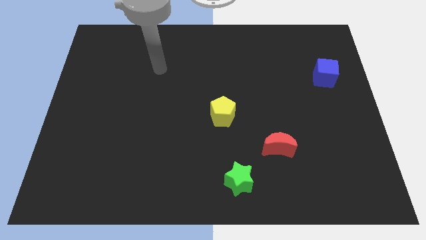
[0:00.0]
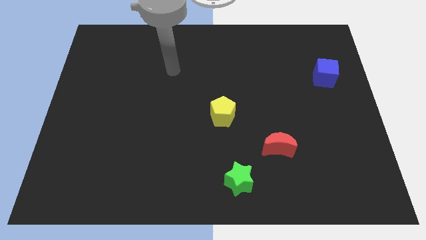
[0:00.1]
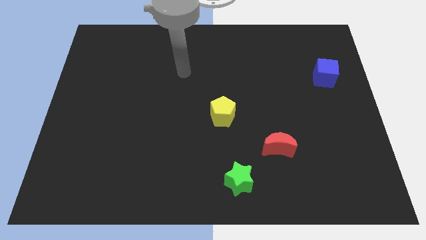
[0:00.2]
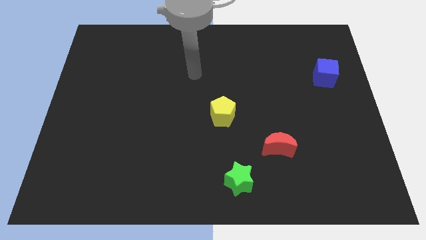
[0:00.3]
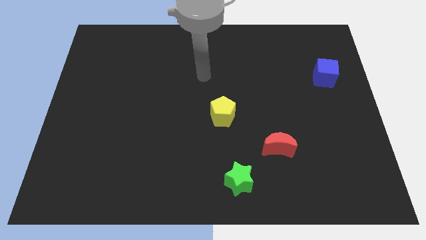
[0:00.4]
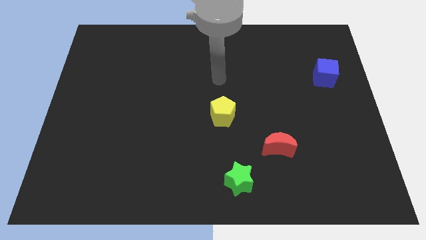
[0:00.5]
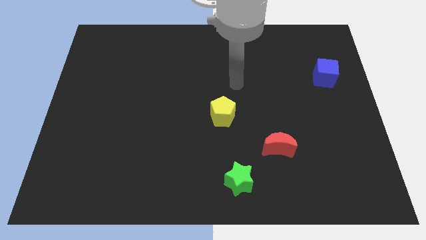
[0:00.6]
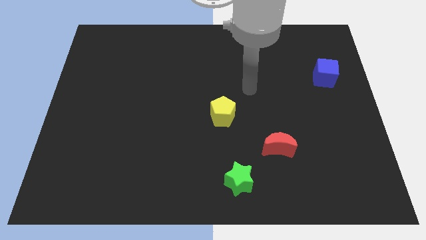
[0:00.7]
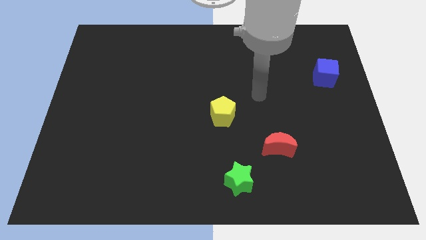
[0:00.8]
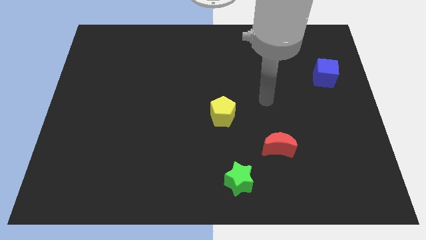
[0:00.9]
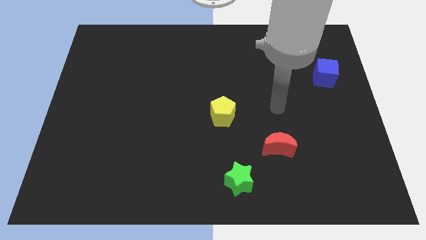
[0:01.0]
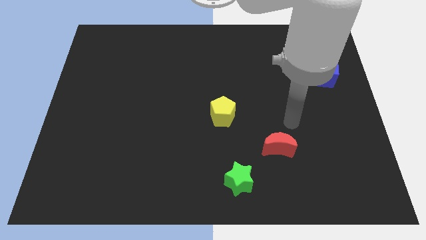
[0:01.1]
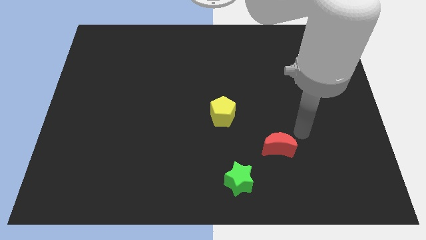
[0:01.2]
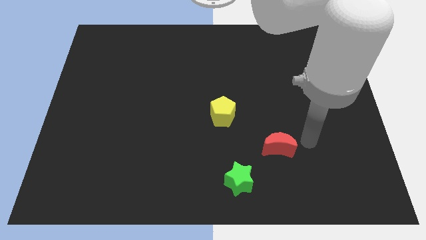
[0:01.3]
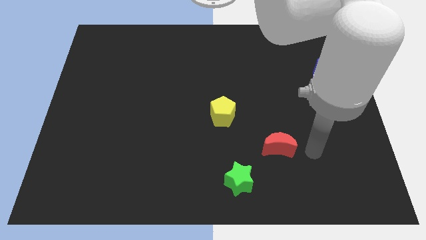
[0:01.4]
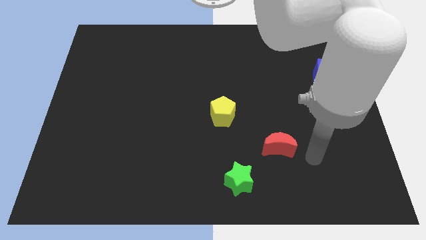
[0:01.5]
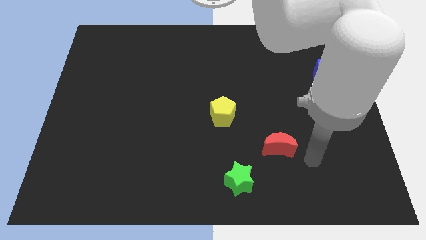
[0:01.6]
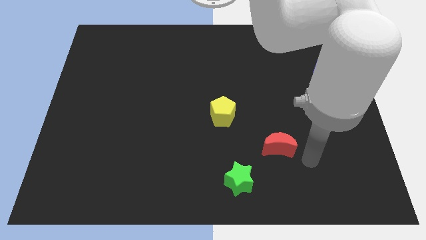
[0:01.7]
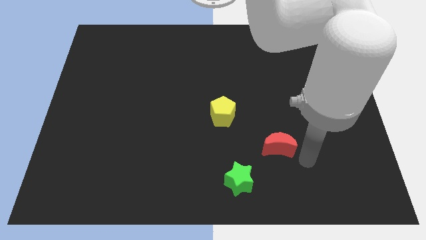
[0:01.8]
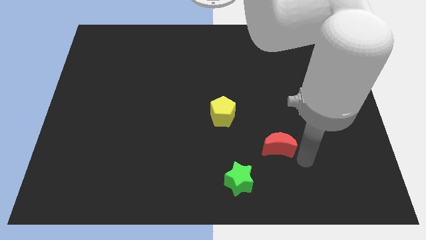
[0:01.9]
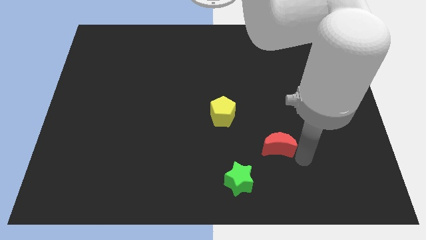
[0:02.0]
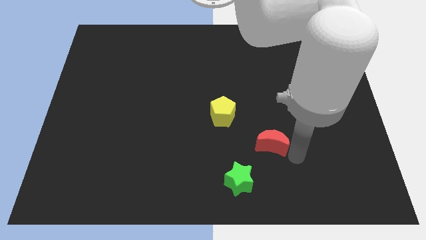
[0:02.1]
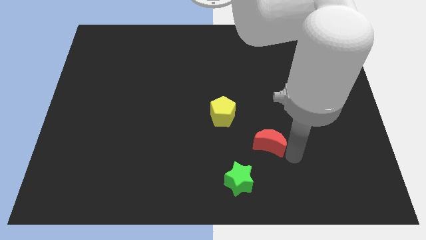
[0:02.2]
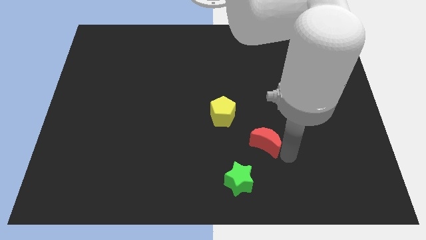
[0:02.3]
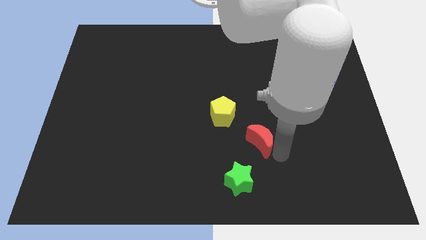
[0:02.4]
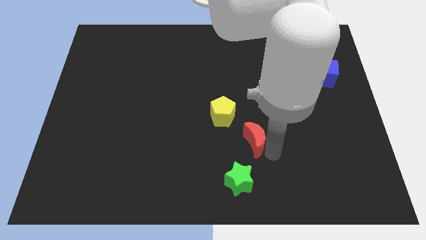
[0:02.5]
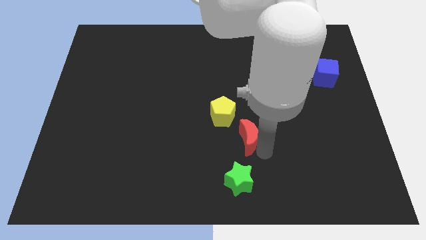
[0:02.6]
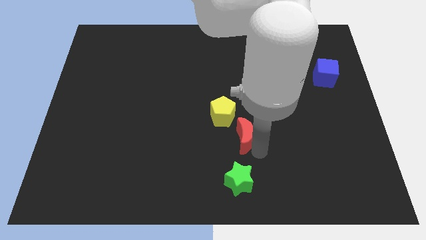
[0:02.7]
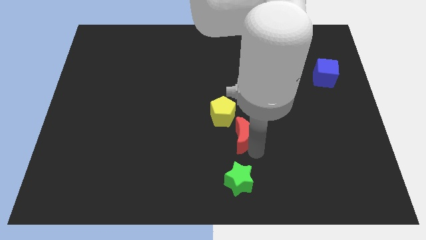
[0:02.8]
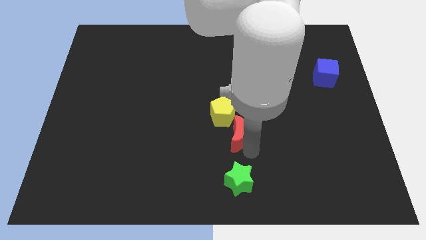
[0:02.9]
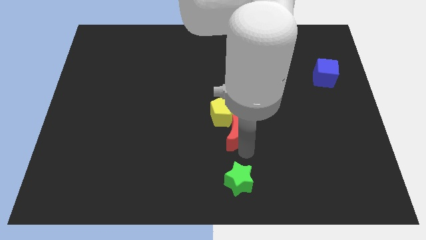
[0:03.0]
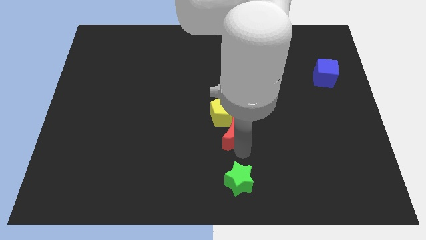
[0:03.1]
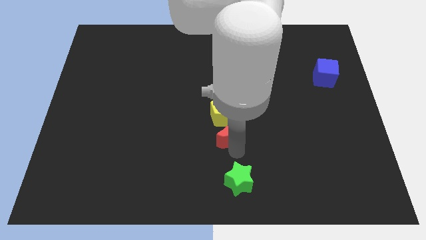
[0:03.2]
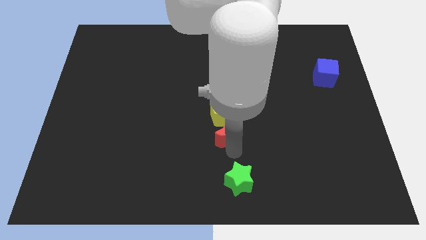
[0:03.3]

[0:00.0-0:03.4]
put the red moon to the yellow pentagon

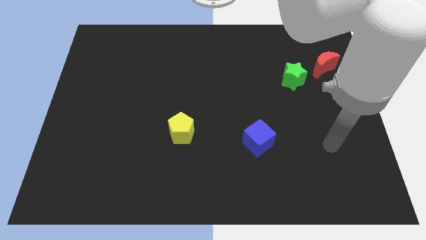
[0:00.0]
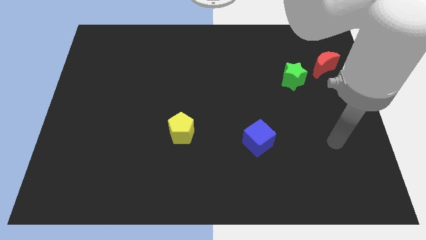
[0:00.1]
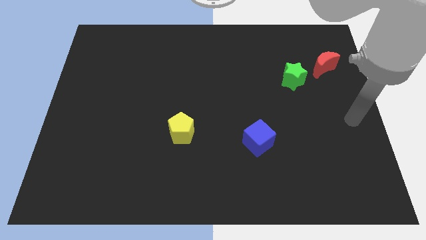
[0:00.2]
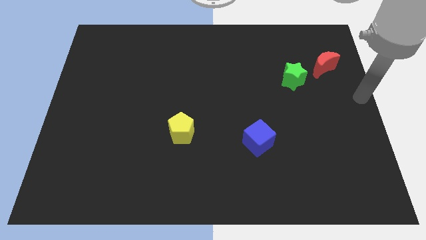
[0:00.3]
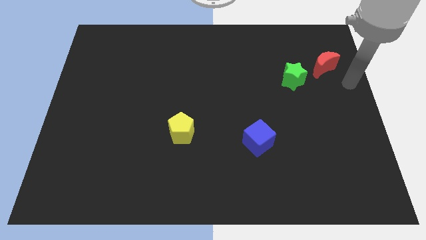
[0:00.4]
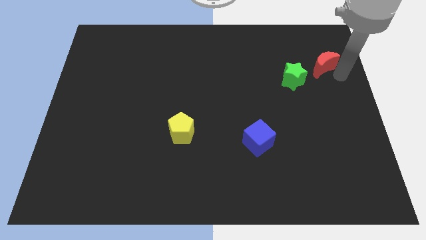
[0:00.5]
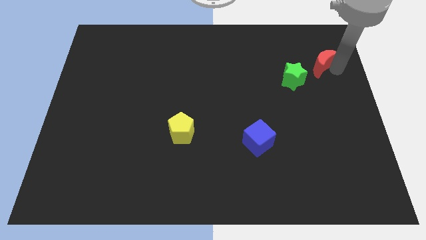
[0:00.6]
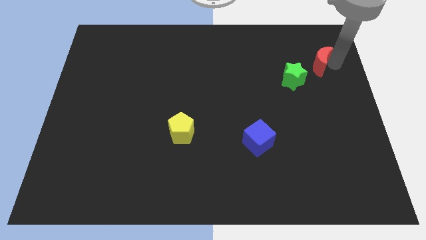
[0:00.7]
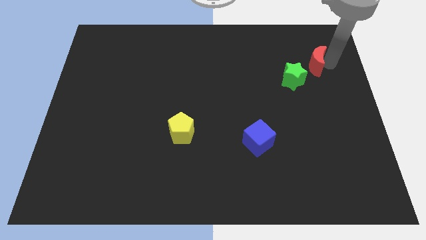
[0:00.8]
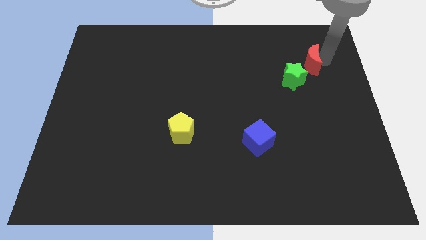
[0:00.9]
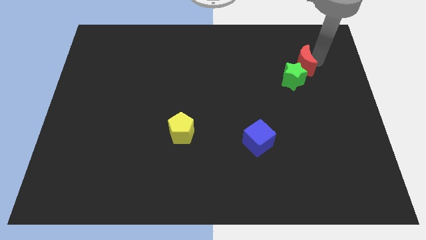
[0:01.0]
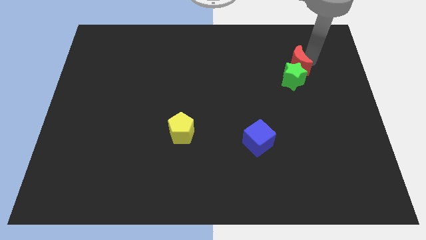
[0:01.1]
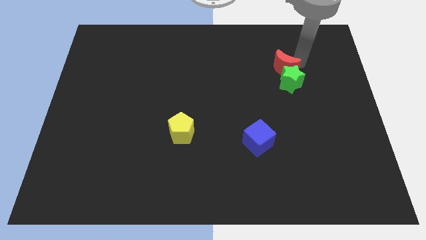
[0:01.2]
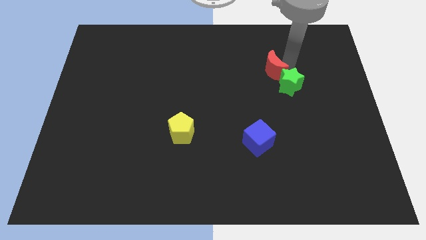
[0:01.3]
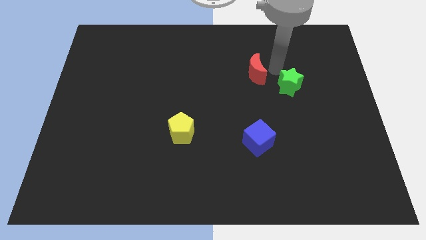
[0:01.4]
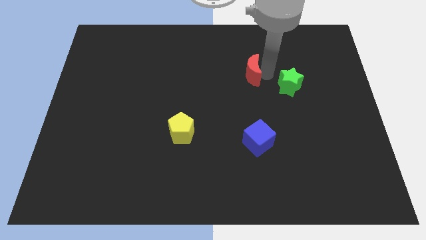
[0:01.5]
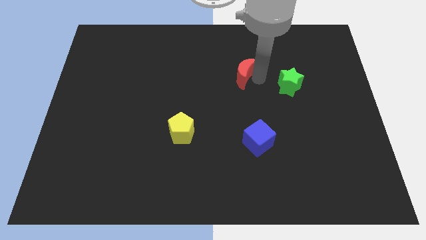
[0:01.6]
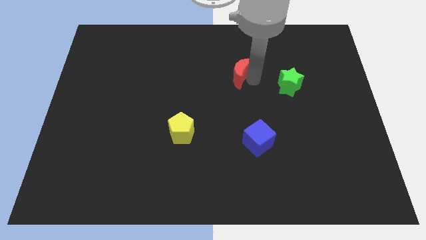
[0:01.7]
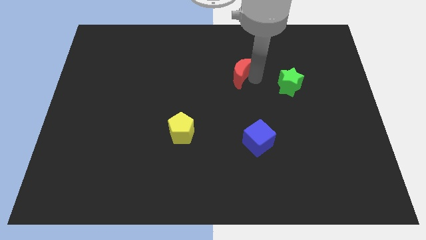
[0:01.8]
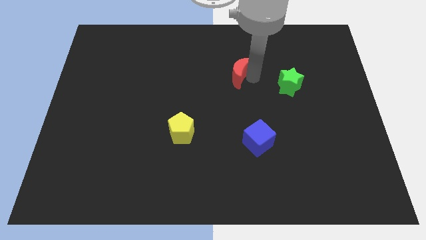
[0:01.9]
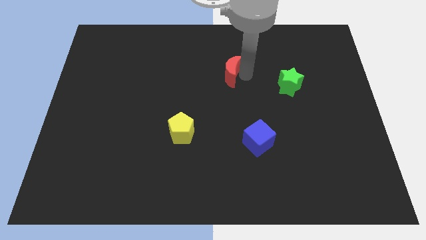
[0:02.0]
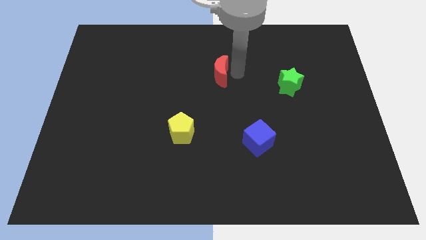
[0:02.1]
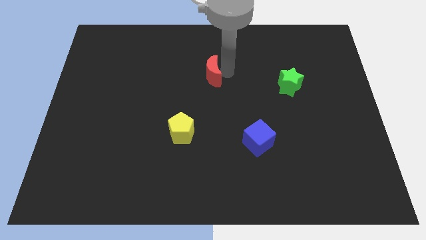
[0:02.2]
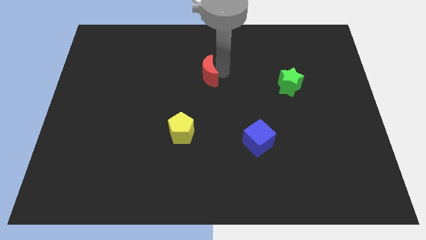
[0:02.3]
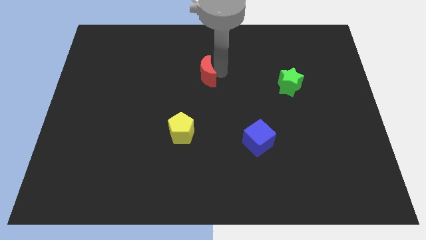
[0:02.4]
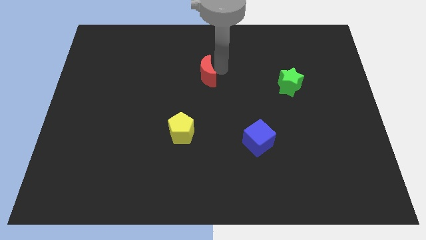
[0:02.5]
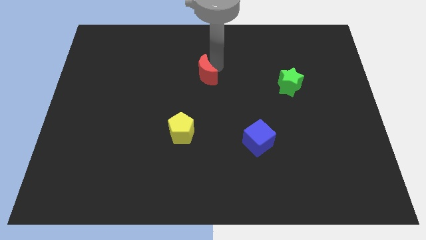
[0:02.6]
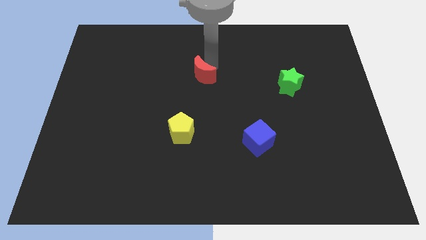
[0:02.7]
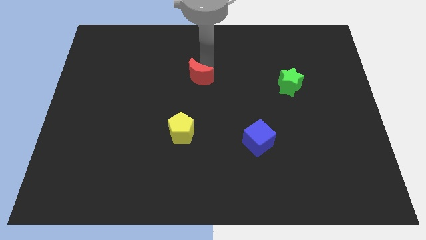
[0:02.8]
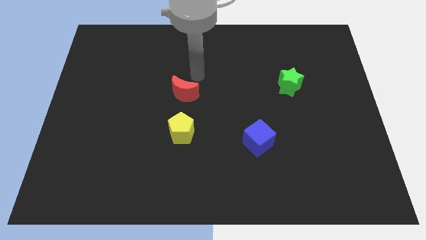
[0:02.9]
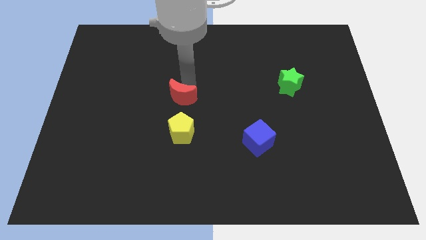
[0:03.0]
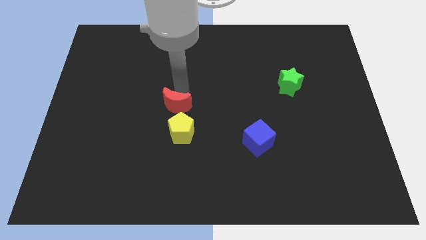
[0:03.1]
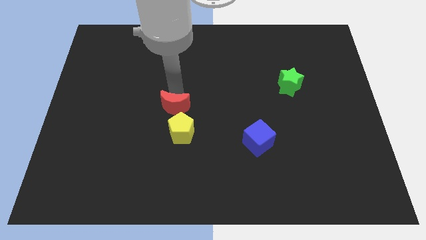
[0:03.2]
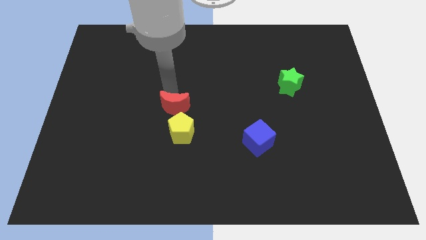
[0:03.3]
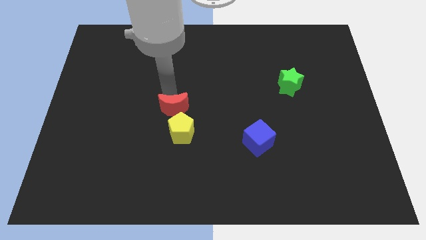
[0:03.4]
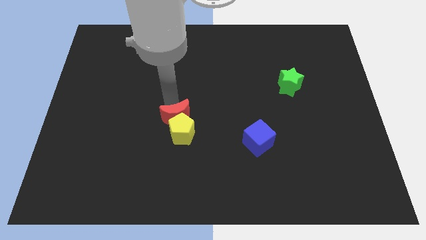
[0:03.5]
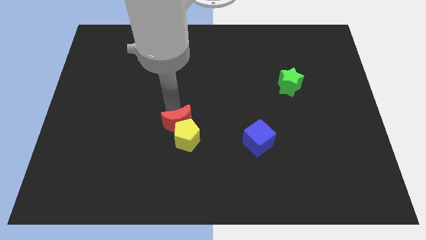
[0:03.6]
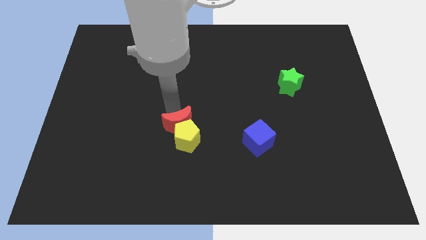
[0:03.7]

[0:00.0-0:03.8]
push the red block to the pentagon

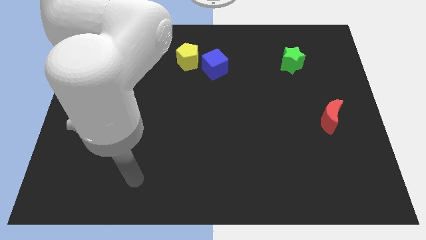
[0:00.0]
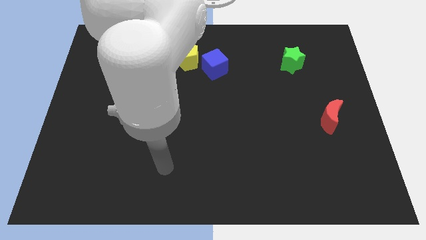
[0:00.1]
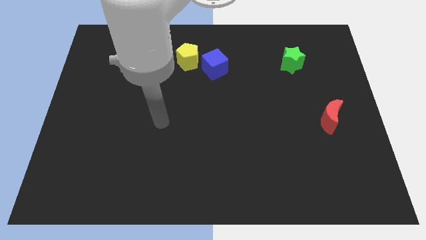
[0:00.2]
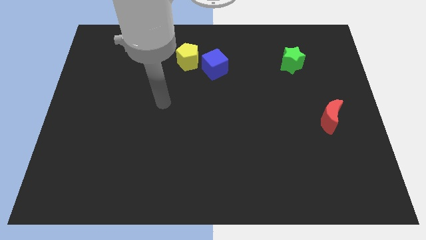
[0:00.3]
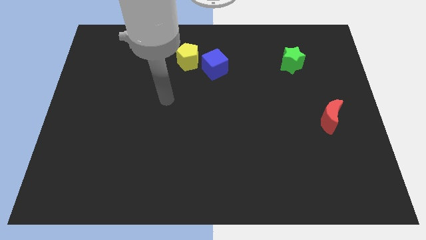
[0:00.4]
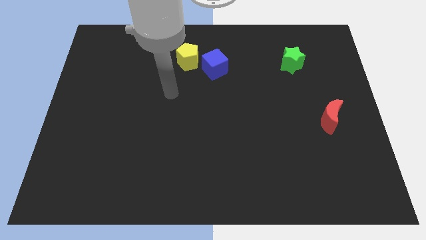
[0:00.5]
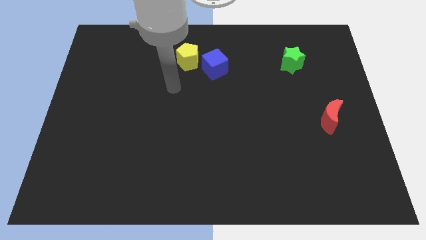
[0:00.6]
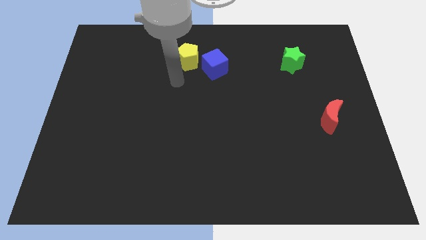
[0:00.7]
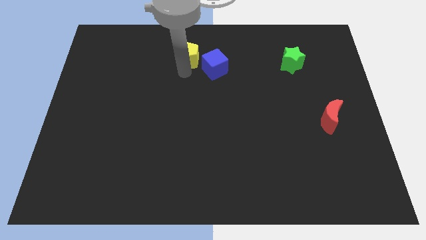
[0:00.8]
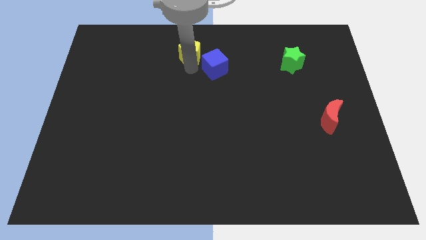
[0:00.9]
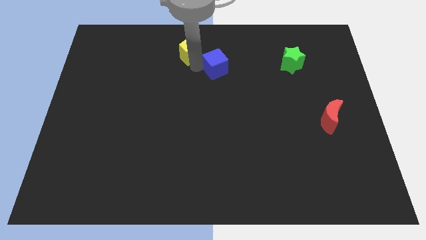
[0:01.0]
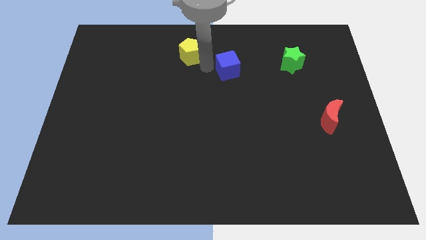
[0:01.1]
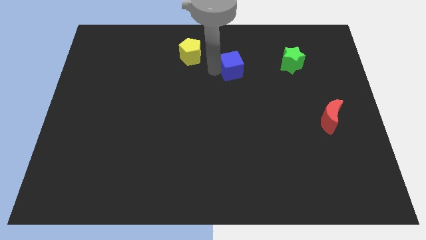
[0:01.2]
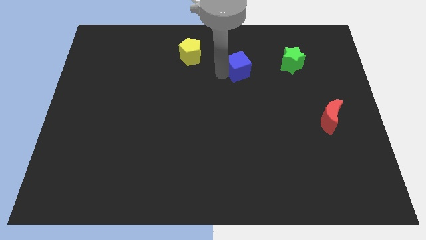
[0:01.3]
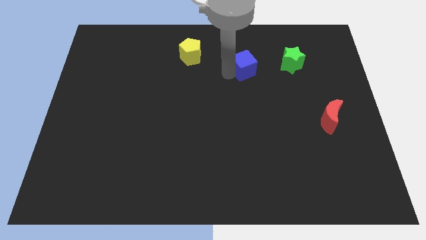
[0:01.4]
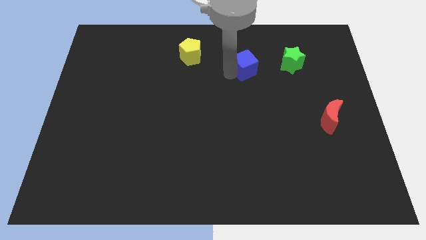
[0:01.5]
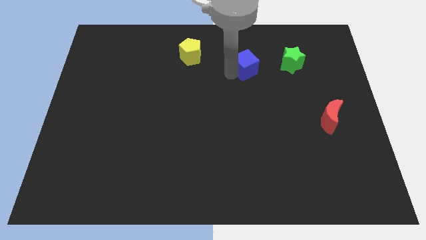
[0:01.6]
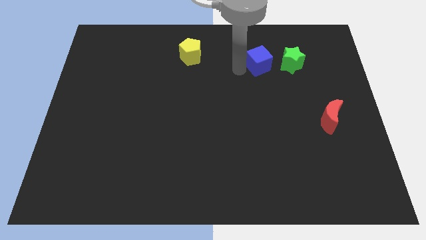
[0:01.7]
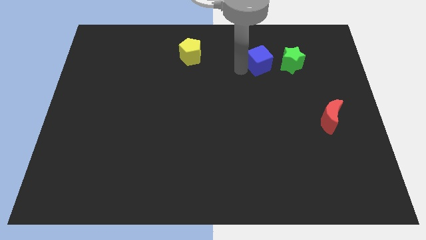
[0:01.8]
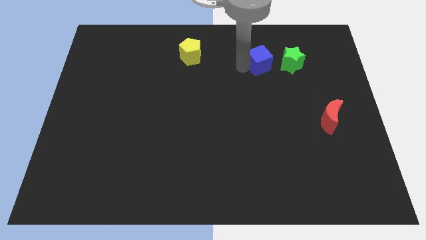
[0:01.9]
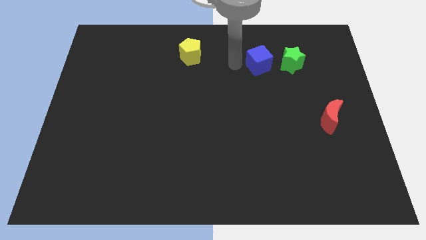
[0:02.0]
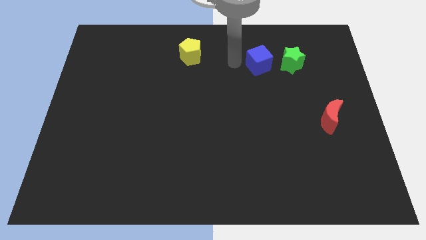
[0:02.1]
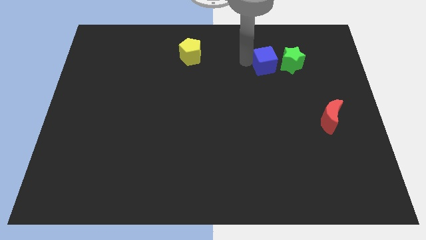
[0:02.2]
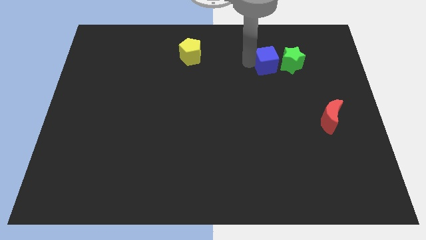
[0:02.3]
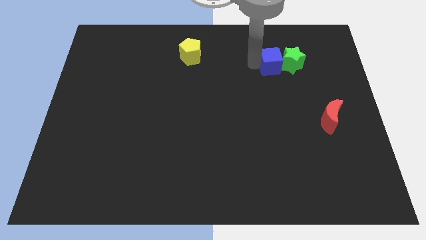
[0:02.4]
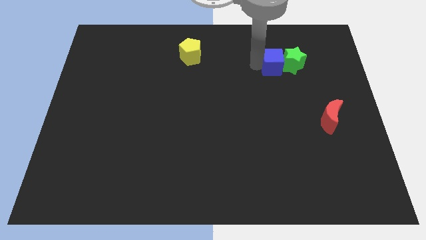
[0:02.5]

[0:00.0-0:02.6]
push the blue cube close to the star
